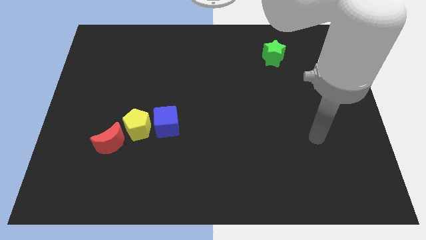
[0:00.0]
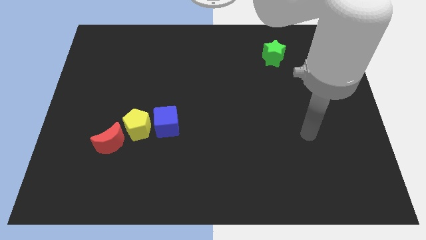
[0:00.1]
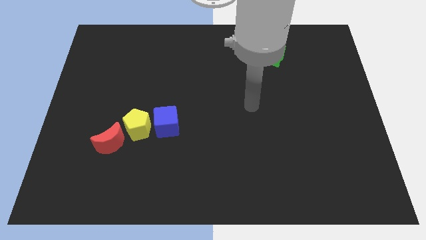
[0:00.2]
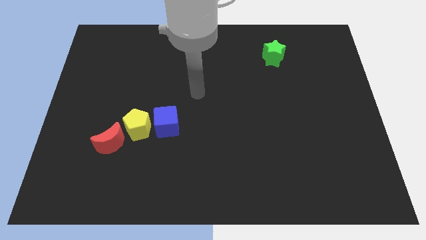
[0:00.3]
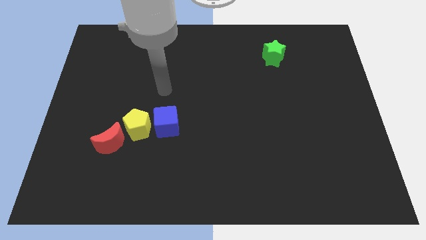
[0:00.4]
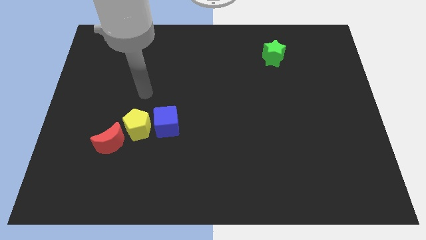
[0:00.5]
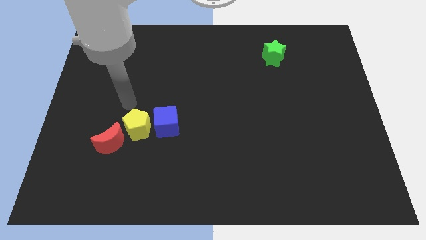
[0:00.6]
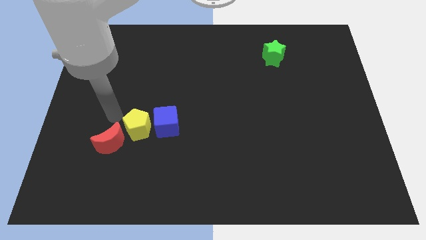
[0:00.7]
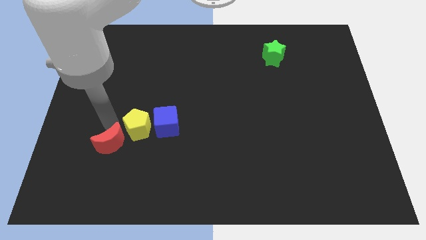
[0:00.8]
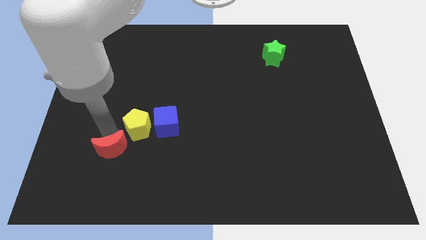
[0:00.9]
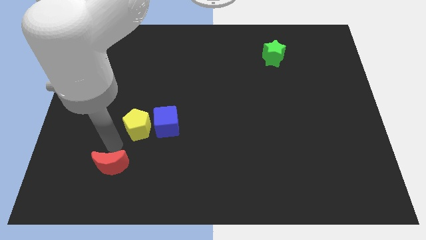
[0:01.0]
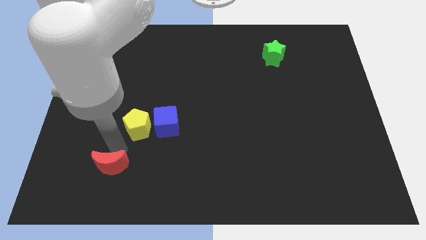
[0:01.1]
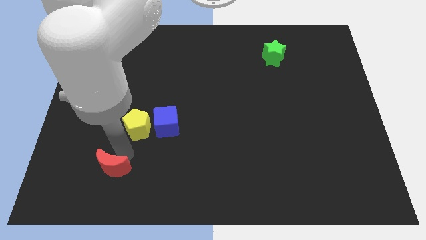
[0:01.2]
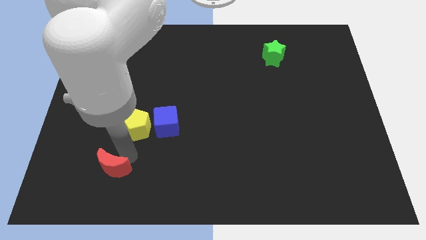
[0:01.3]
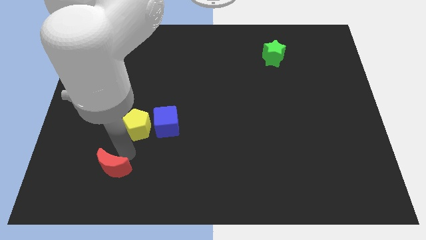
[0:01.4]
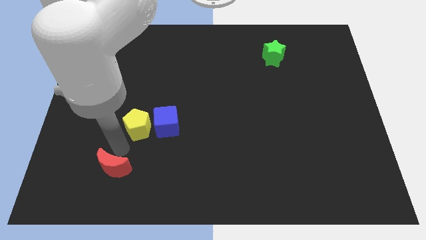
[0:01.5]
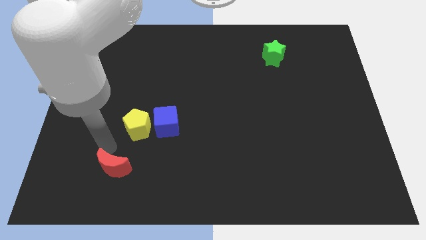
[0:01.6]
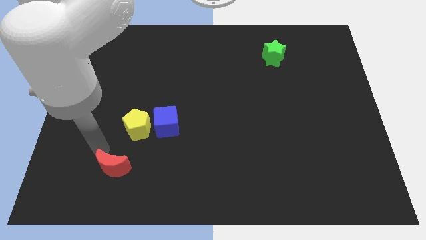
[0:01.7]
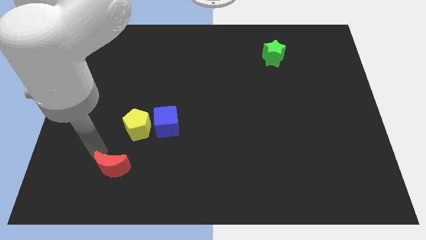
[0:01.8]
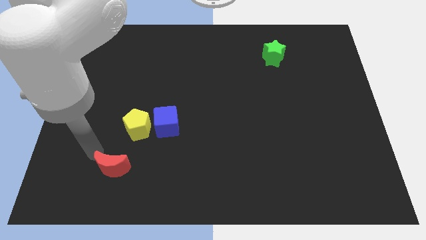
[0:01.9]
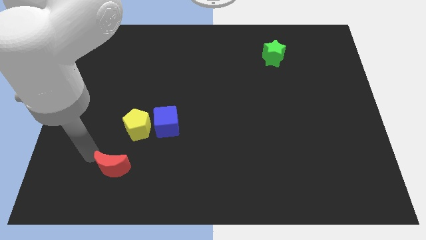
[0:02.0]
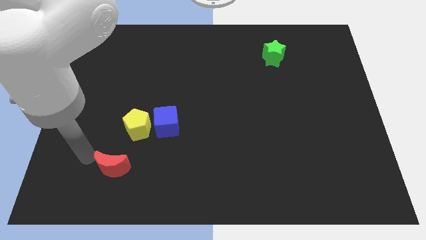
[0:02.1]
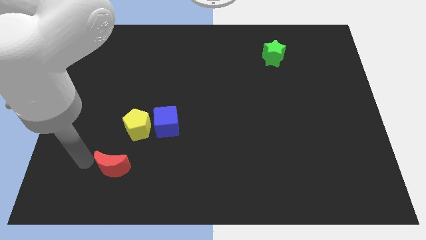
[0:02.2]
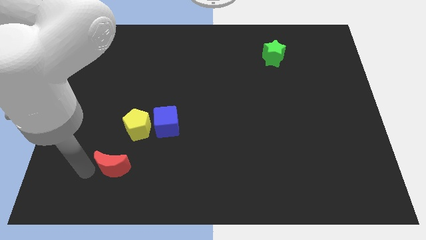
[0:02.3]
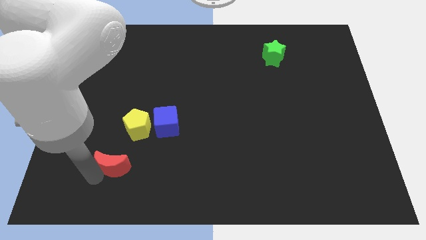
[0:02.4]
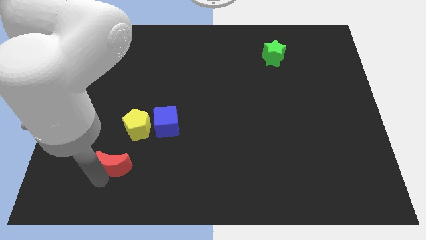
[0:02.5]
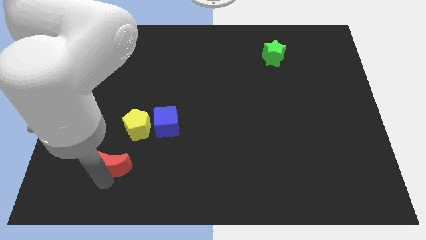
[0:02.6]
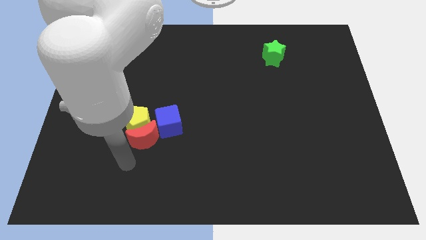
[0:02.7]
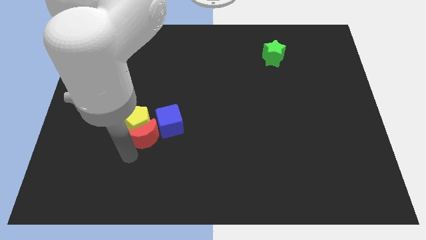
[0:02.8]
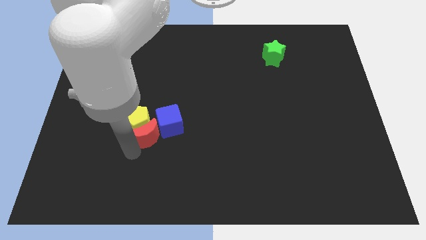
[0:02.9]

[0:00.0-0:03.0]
push the red block to the blue block

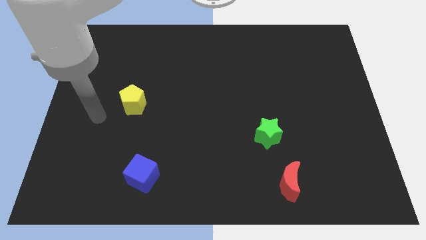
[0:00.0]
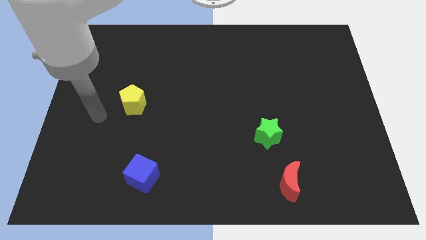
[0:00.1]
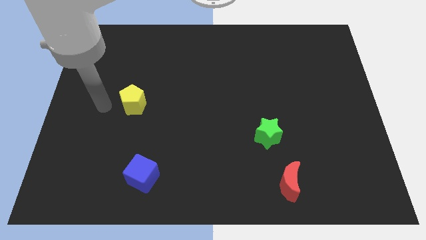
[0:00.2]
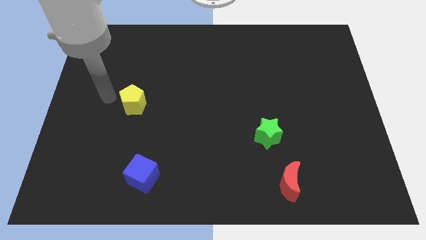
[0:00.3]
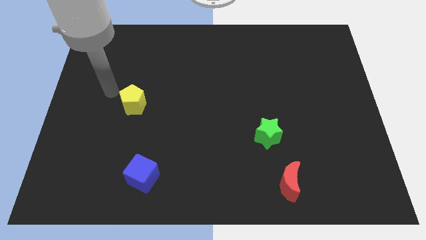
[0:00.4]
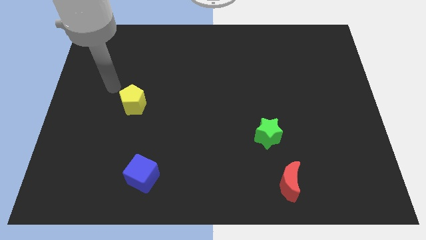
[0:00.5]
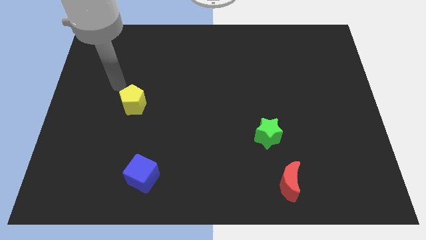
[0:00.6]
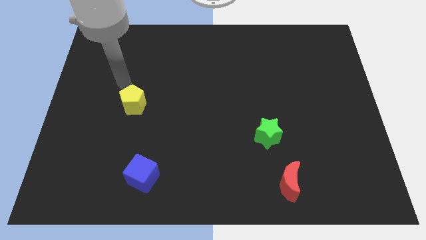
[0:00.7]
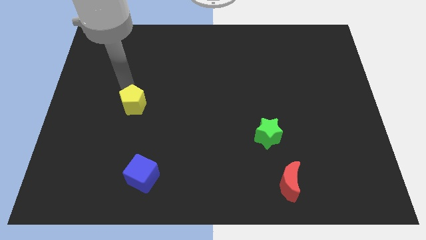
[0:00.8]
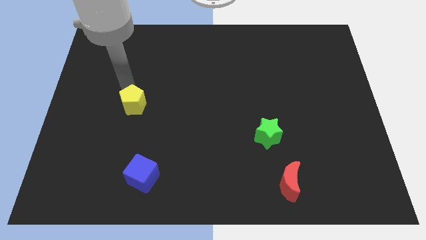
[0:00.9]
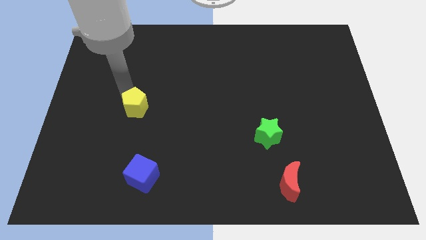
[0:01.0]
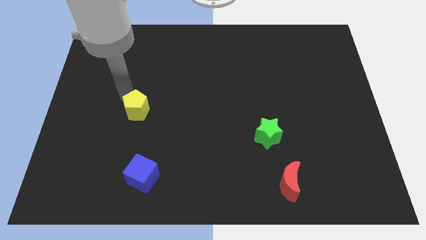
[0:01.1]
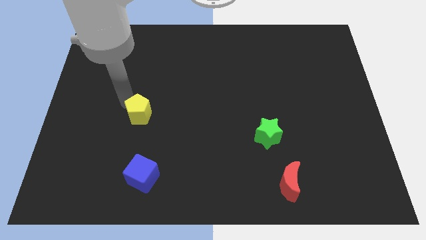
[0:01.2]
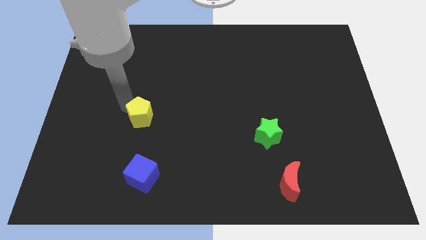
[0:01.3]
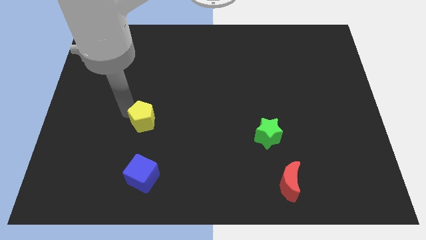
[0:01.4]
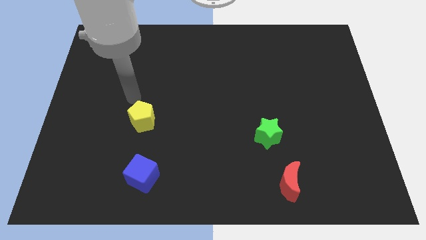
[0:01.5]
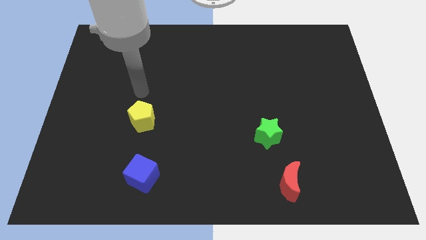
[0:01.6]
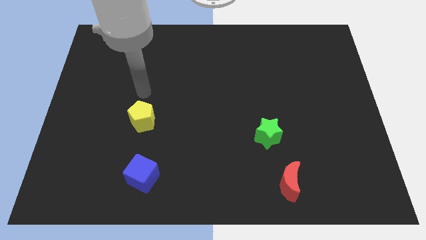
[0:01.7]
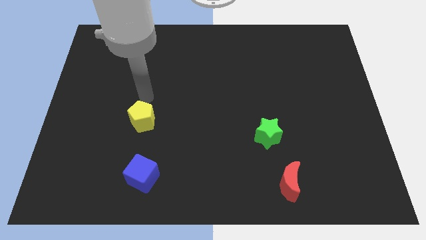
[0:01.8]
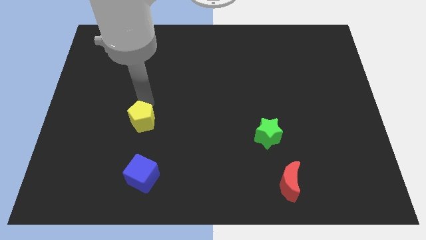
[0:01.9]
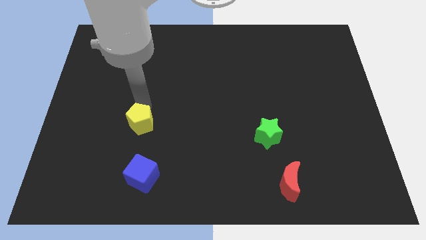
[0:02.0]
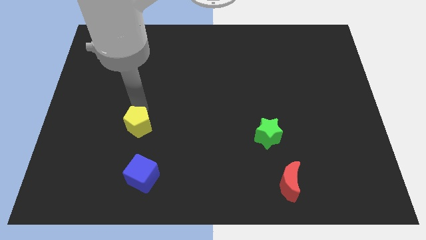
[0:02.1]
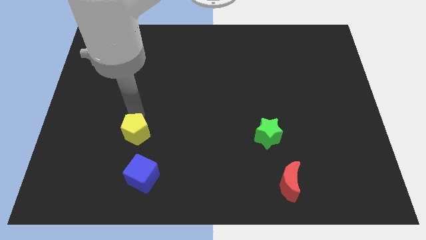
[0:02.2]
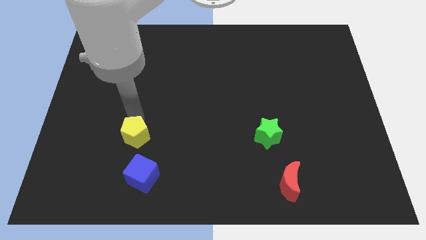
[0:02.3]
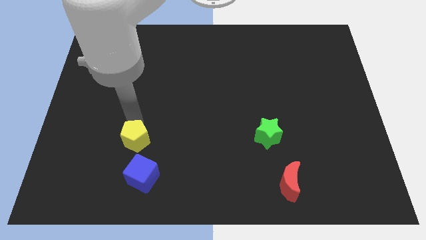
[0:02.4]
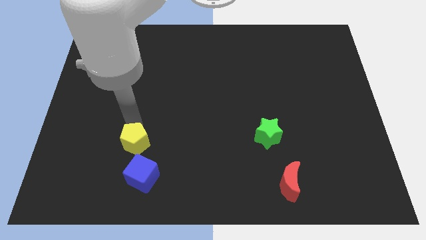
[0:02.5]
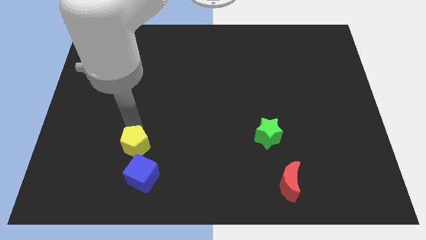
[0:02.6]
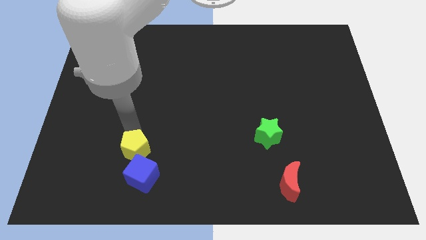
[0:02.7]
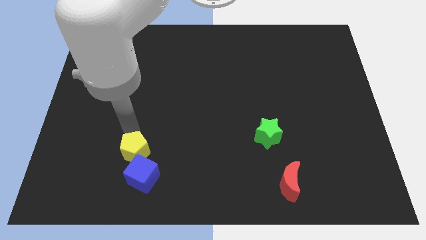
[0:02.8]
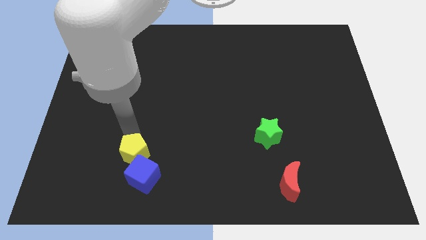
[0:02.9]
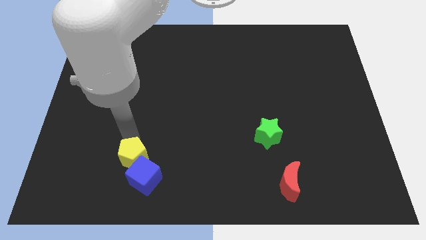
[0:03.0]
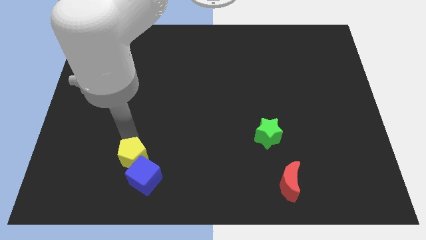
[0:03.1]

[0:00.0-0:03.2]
move the yellow pentagon next to the cube

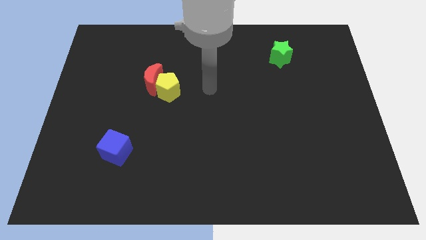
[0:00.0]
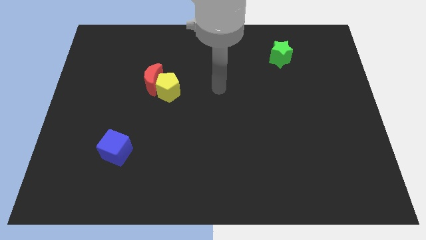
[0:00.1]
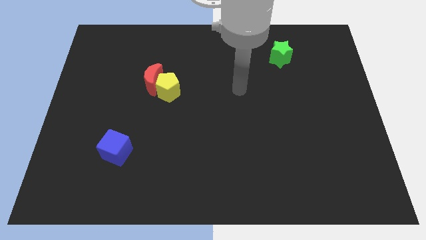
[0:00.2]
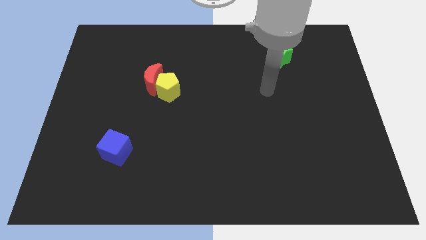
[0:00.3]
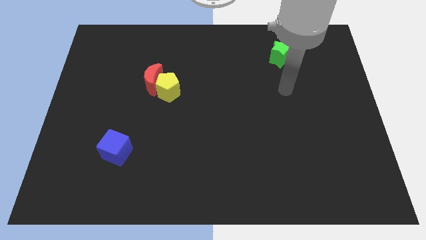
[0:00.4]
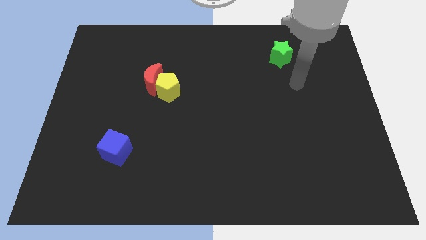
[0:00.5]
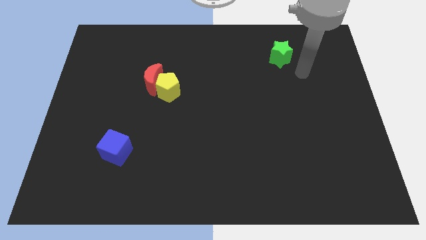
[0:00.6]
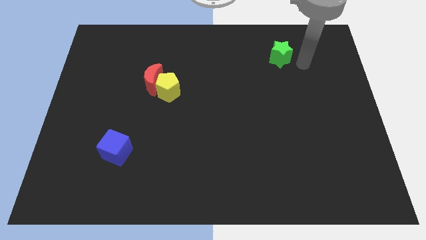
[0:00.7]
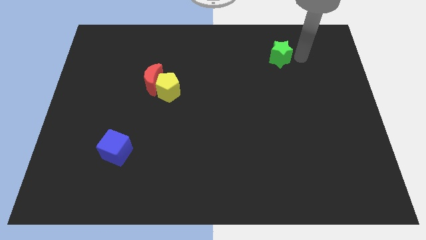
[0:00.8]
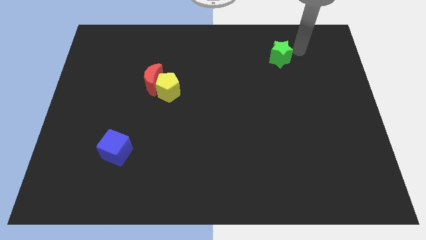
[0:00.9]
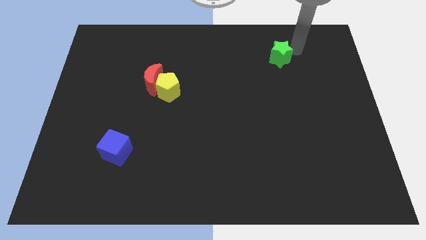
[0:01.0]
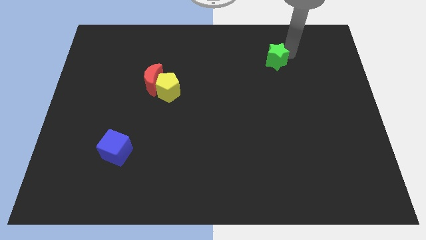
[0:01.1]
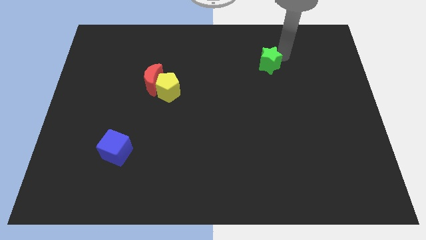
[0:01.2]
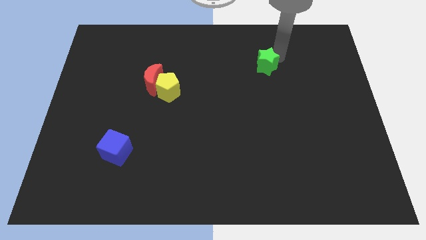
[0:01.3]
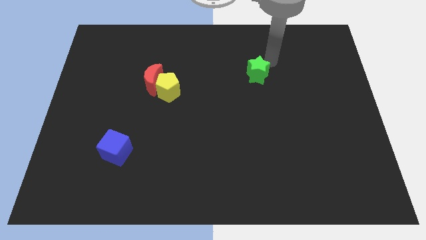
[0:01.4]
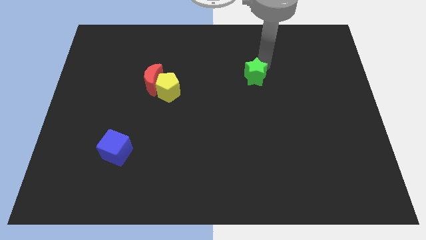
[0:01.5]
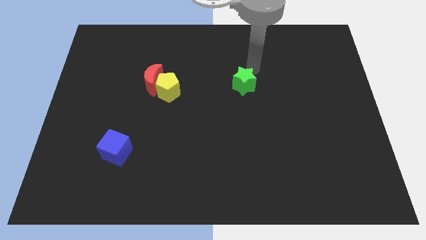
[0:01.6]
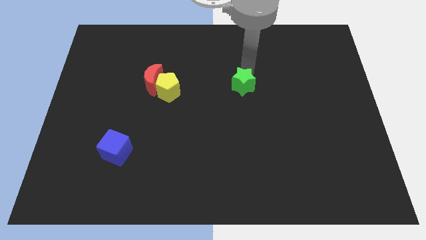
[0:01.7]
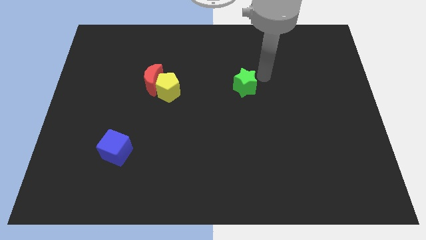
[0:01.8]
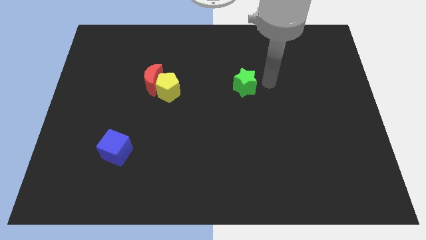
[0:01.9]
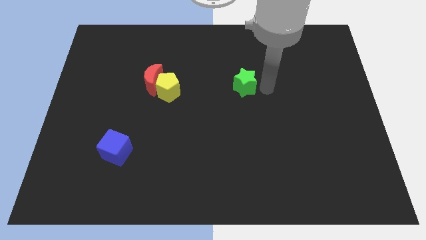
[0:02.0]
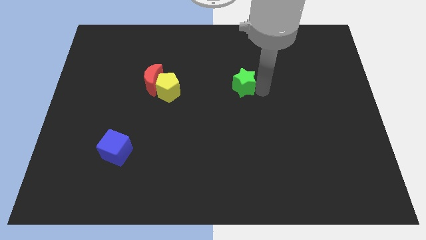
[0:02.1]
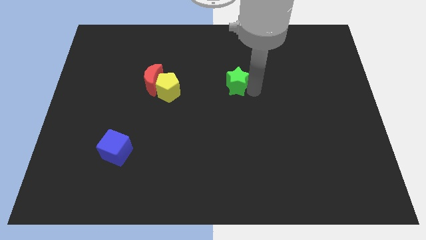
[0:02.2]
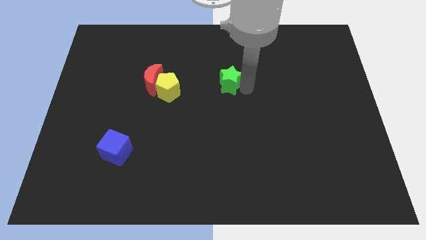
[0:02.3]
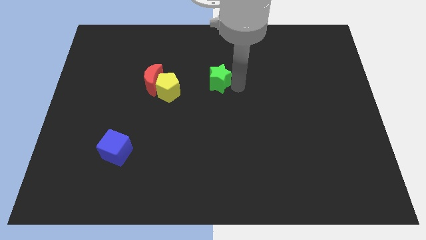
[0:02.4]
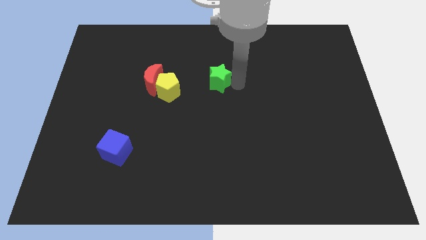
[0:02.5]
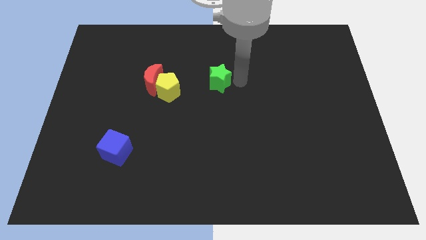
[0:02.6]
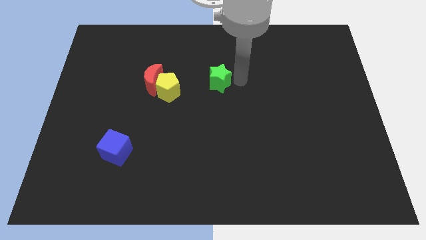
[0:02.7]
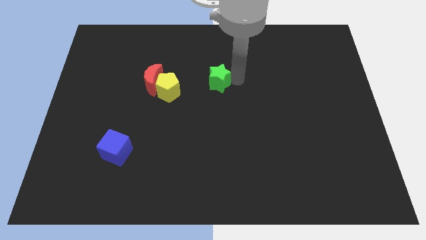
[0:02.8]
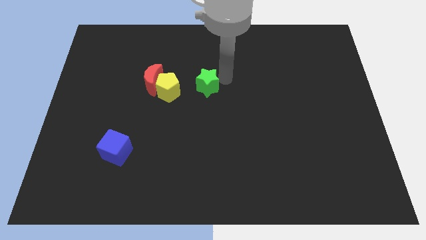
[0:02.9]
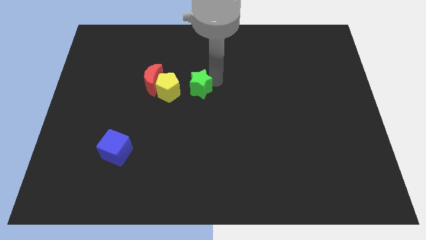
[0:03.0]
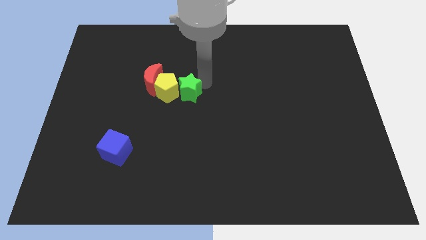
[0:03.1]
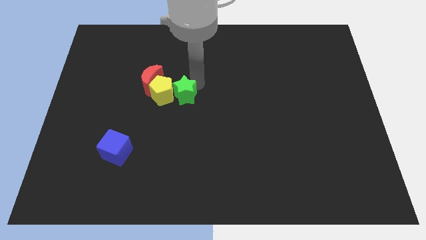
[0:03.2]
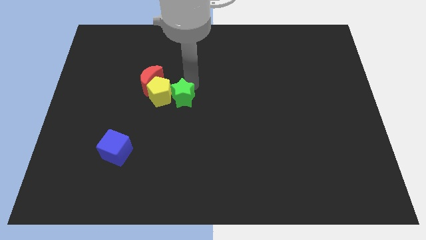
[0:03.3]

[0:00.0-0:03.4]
slide the green star close to the yellow pentagon
